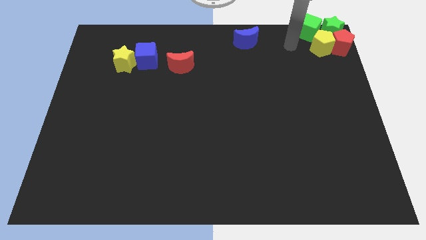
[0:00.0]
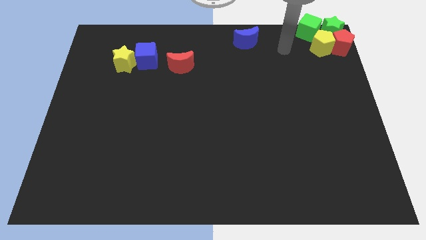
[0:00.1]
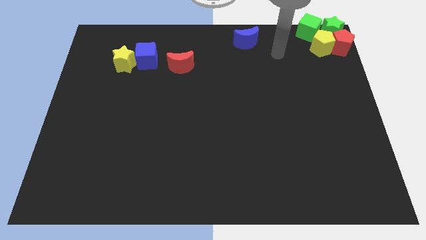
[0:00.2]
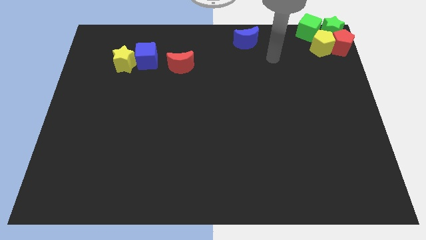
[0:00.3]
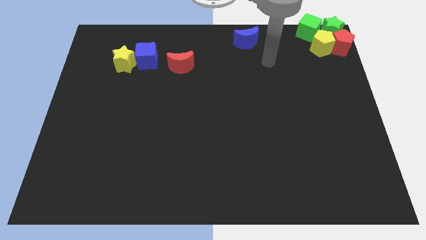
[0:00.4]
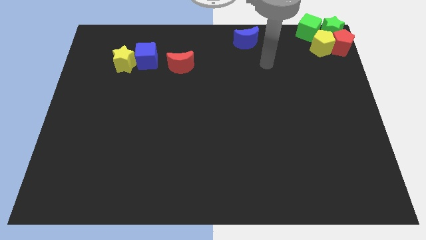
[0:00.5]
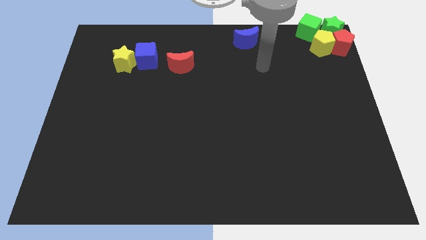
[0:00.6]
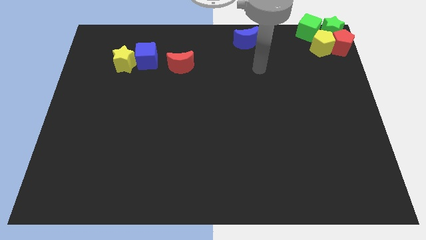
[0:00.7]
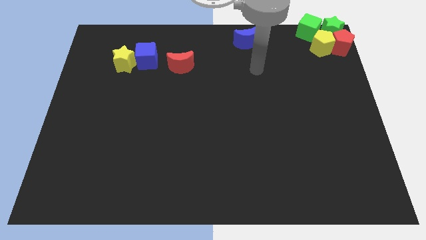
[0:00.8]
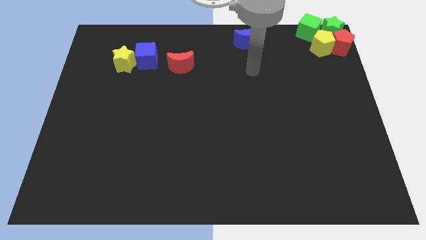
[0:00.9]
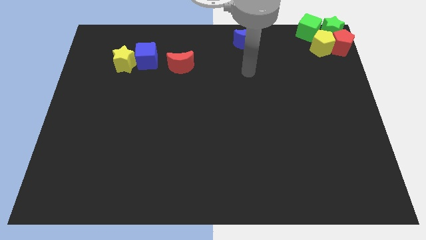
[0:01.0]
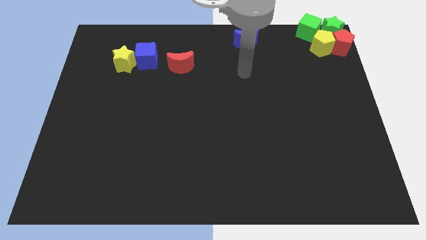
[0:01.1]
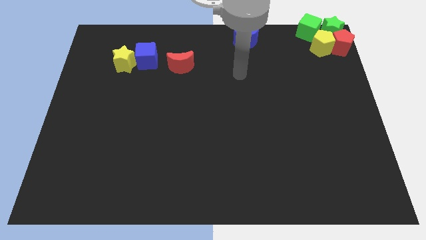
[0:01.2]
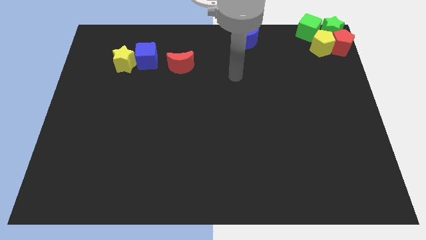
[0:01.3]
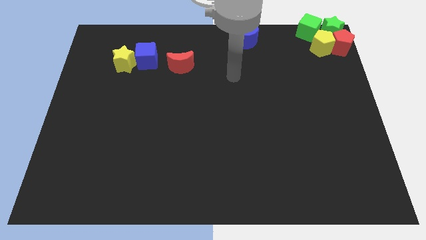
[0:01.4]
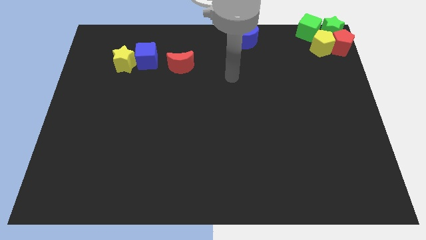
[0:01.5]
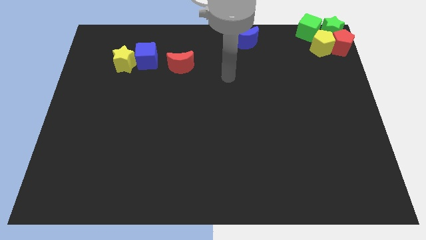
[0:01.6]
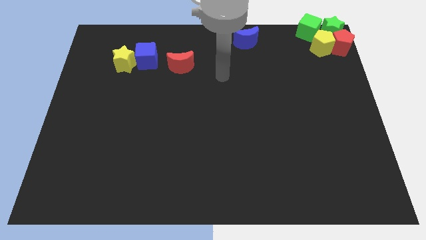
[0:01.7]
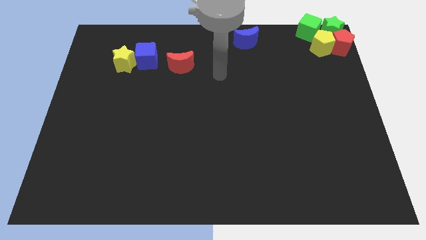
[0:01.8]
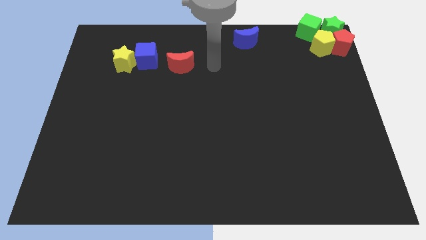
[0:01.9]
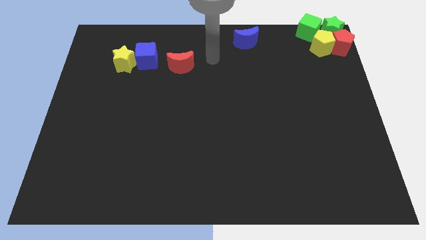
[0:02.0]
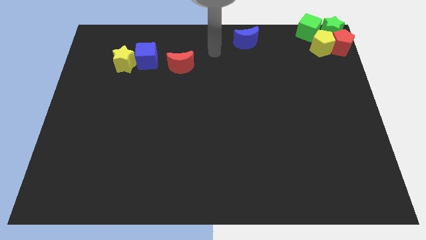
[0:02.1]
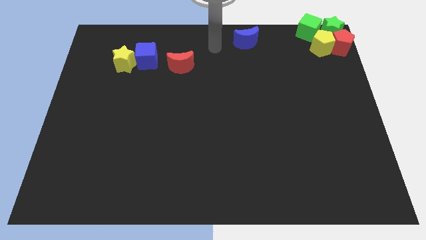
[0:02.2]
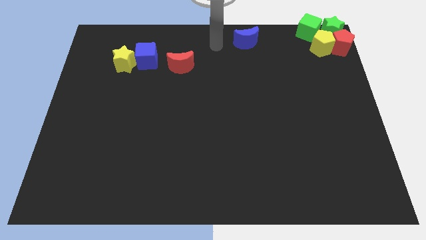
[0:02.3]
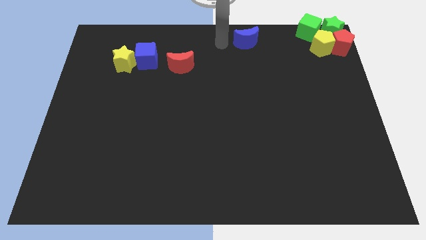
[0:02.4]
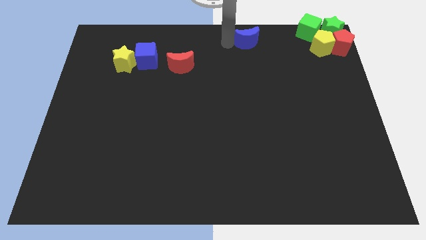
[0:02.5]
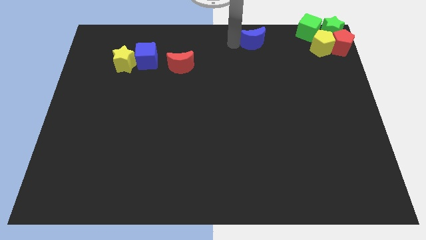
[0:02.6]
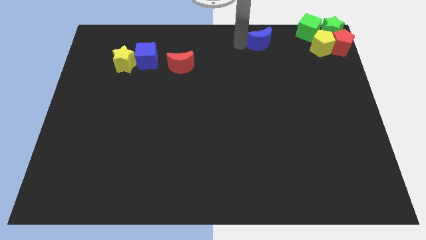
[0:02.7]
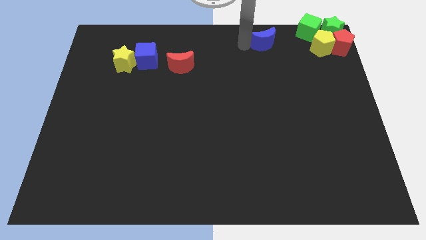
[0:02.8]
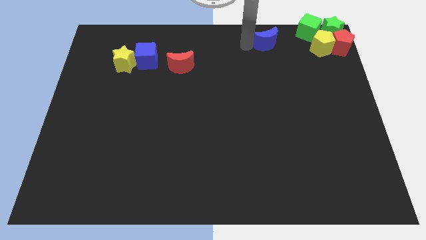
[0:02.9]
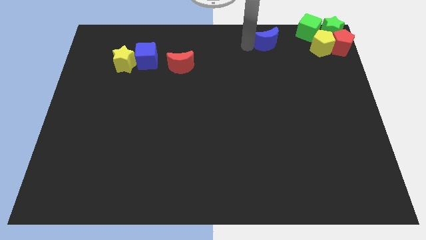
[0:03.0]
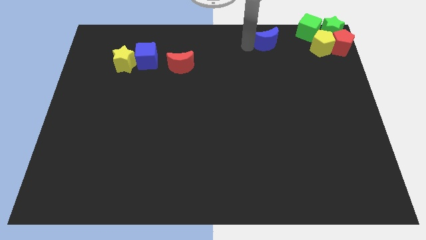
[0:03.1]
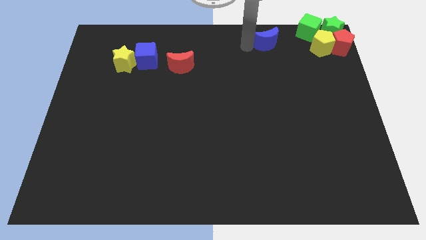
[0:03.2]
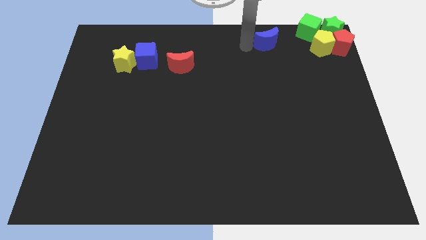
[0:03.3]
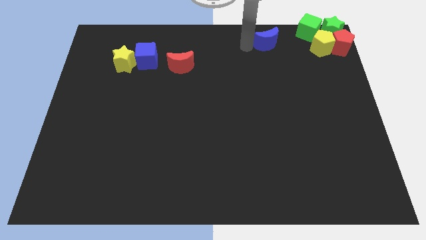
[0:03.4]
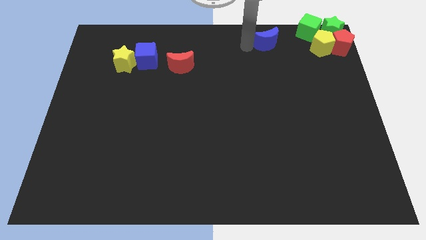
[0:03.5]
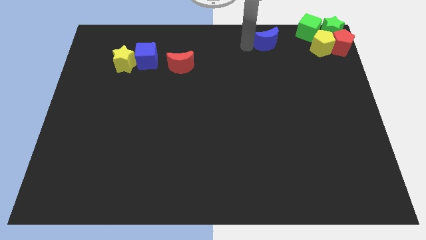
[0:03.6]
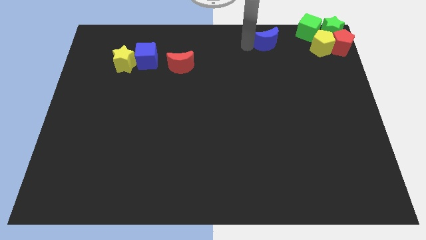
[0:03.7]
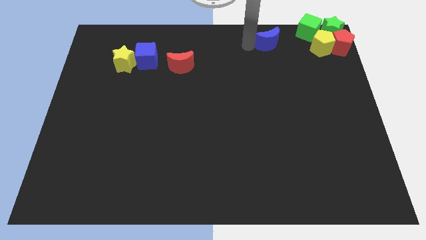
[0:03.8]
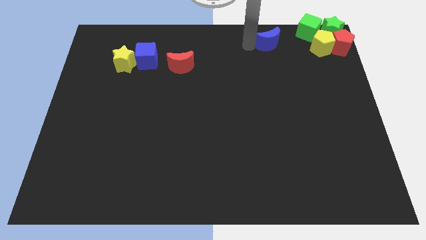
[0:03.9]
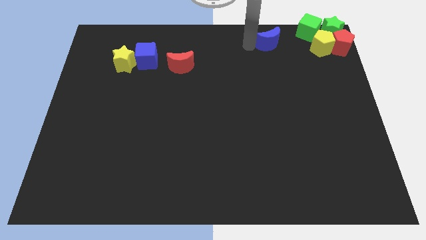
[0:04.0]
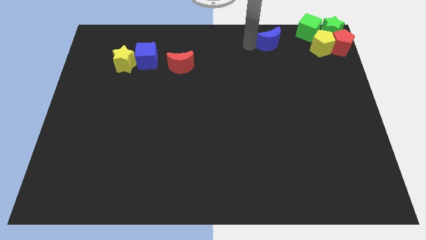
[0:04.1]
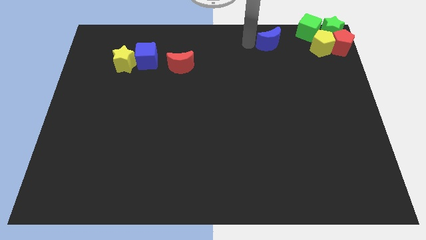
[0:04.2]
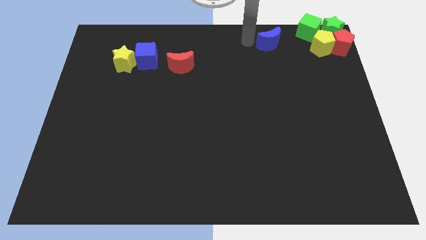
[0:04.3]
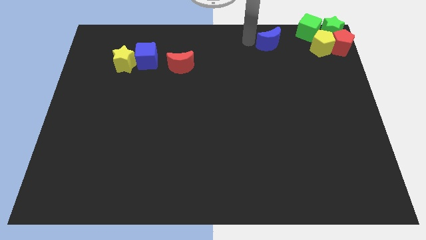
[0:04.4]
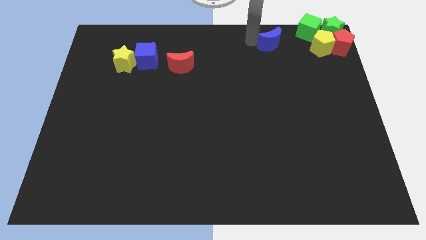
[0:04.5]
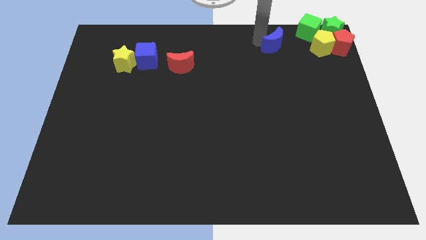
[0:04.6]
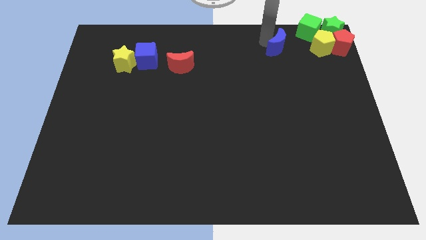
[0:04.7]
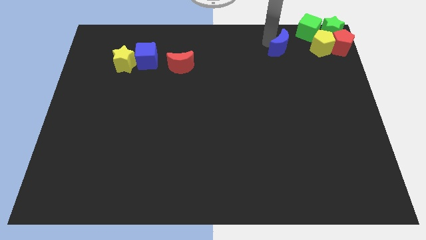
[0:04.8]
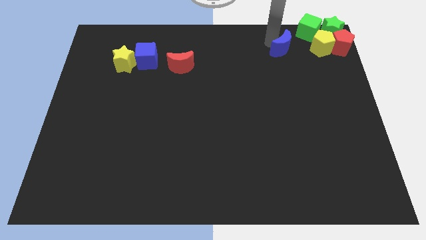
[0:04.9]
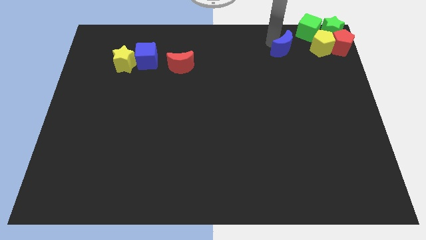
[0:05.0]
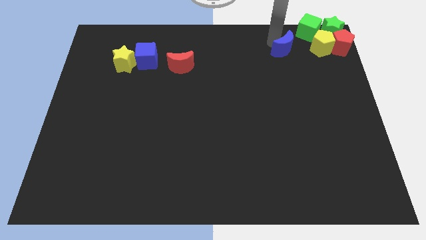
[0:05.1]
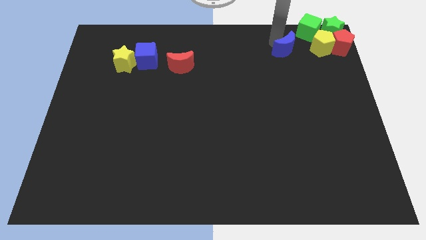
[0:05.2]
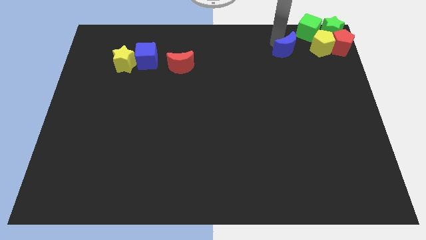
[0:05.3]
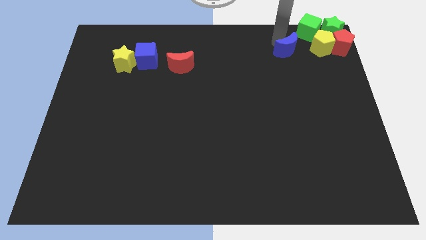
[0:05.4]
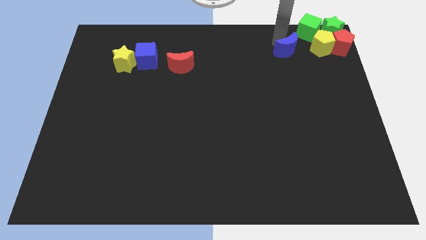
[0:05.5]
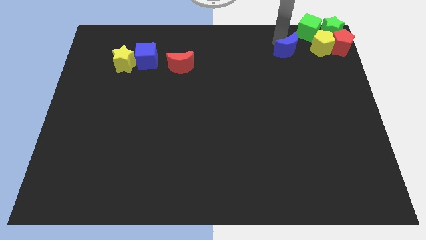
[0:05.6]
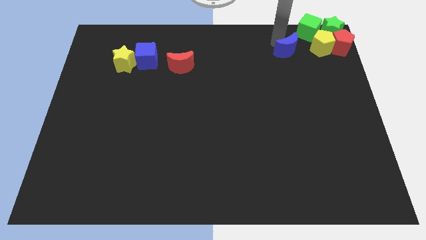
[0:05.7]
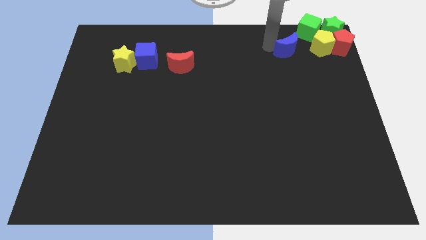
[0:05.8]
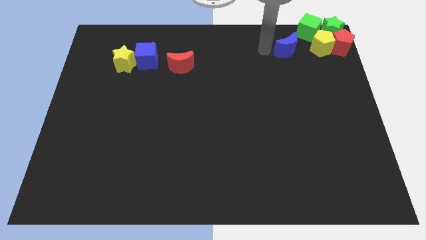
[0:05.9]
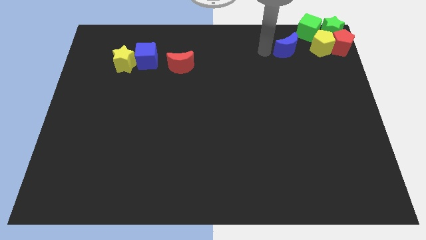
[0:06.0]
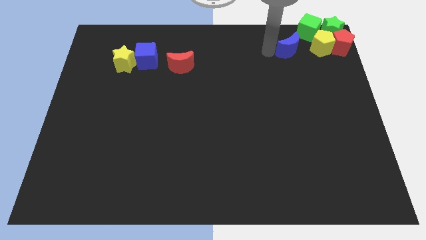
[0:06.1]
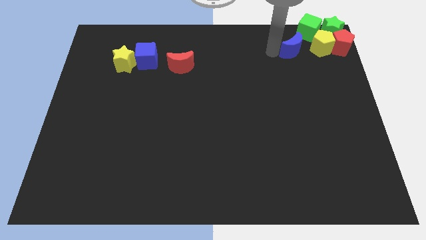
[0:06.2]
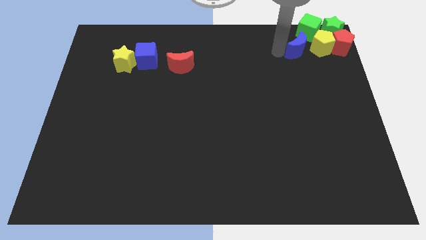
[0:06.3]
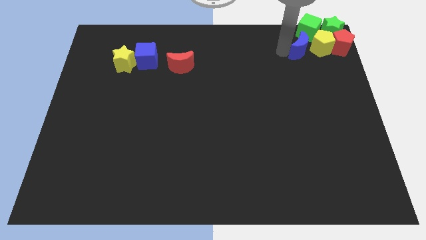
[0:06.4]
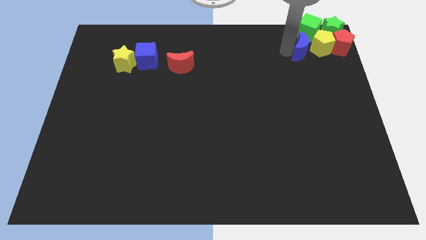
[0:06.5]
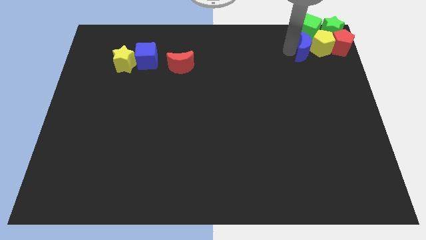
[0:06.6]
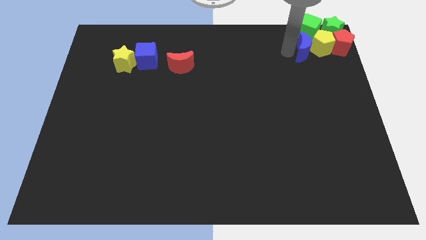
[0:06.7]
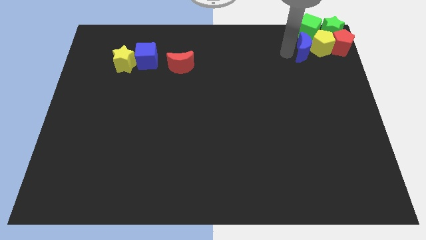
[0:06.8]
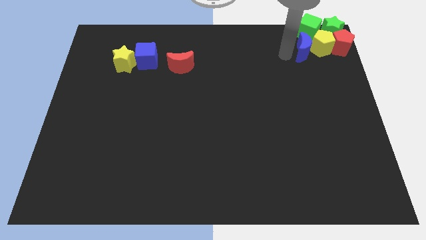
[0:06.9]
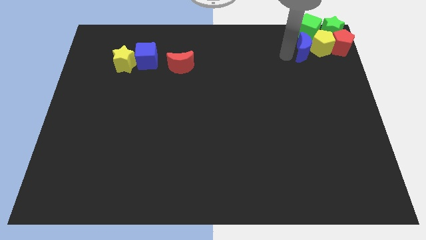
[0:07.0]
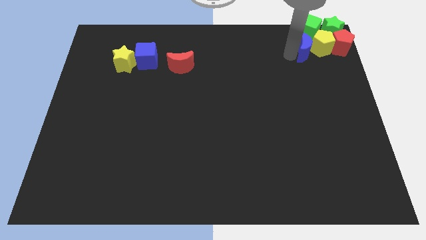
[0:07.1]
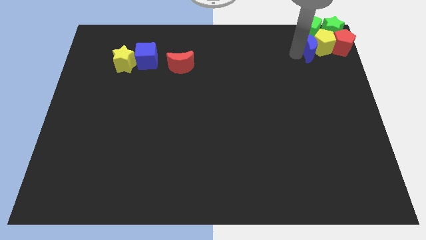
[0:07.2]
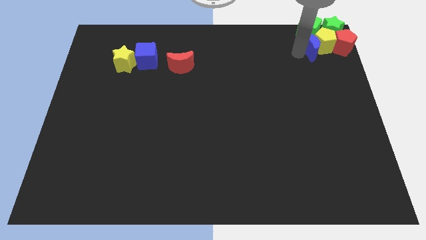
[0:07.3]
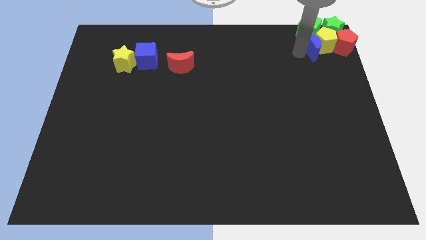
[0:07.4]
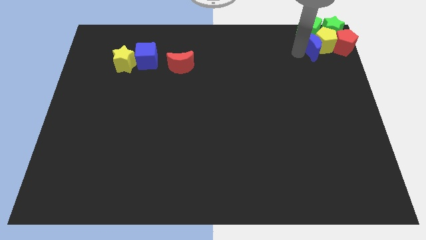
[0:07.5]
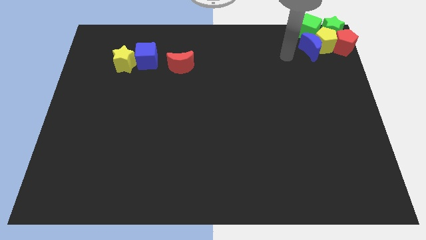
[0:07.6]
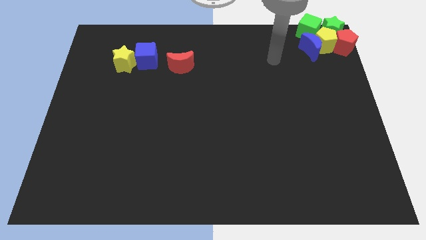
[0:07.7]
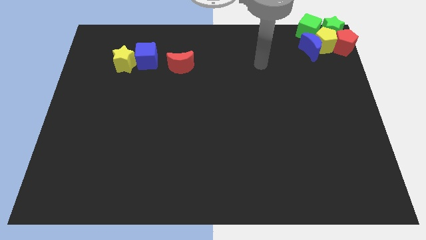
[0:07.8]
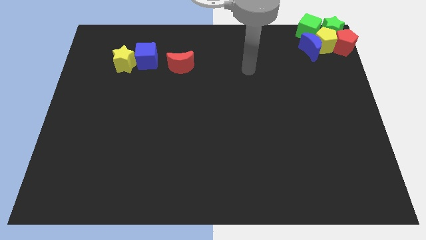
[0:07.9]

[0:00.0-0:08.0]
push the blue moon into the group of blocks

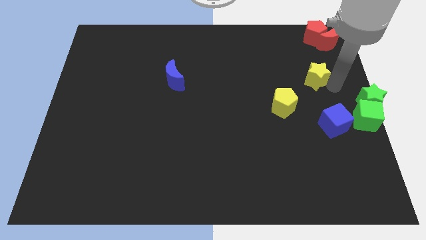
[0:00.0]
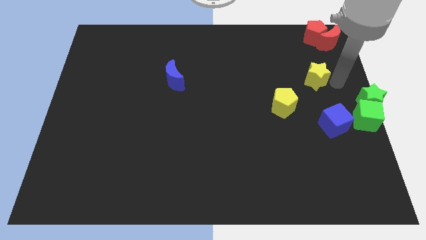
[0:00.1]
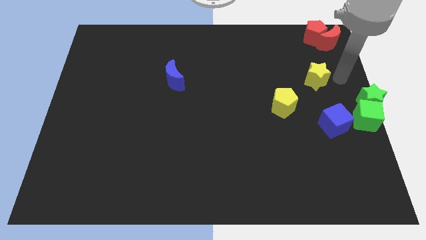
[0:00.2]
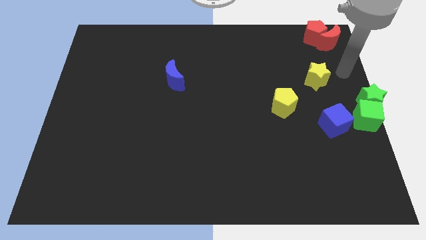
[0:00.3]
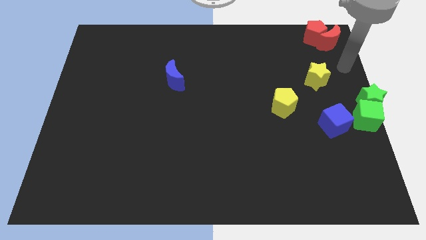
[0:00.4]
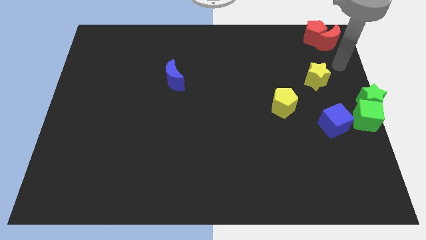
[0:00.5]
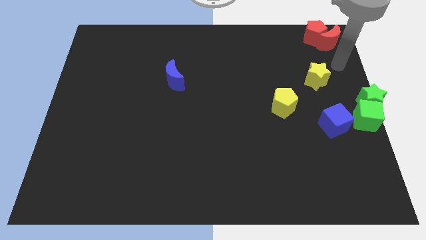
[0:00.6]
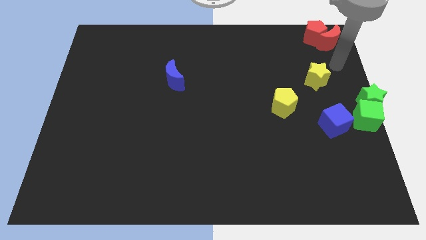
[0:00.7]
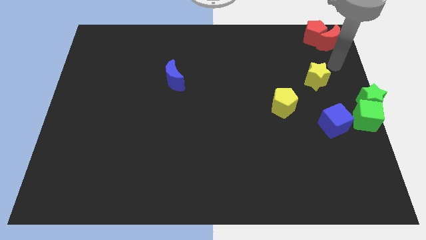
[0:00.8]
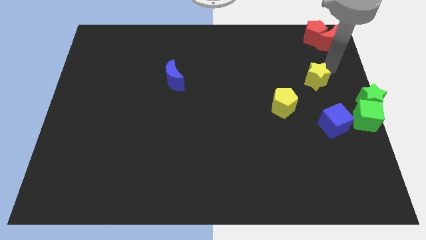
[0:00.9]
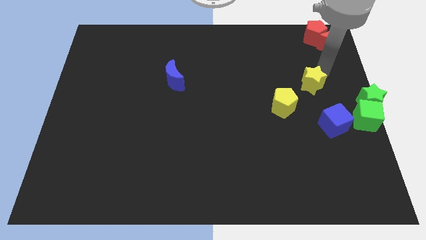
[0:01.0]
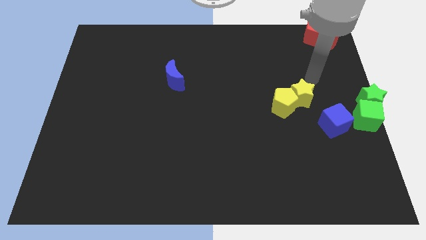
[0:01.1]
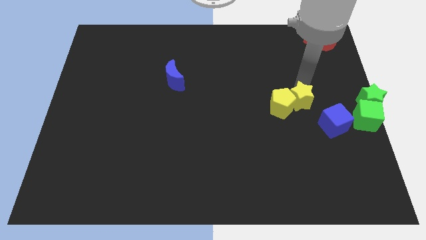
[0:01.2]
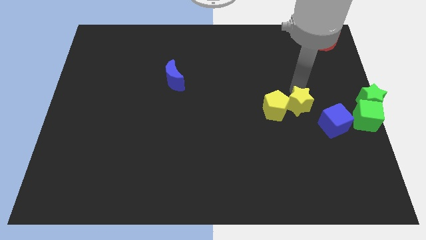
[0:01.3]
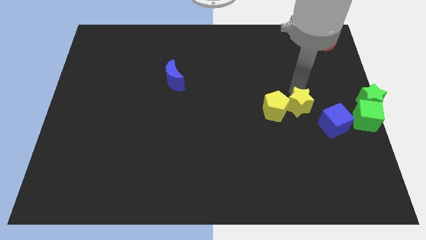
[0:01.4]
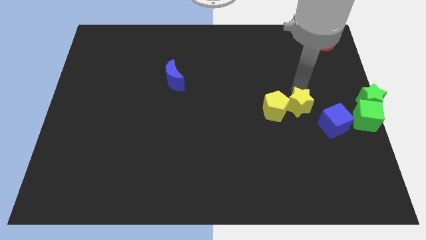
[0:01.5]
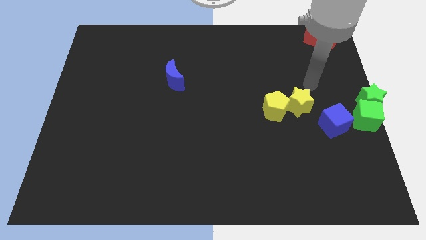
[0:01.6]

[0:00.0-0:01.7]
push the yellow star into the yellow pentagon
